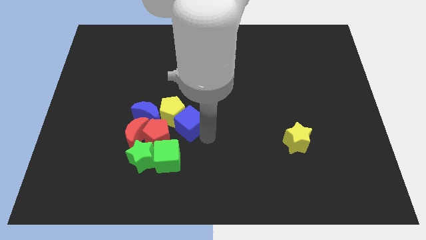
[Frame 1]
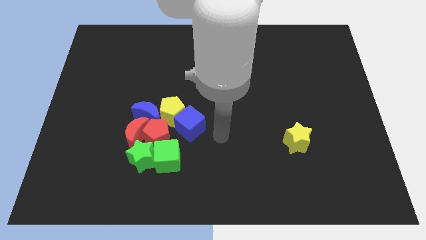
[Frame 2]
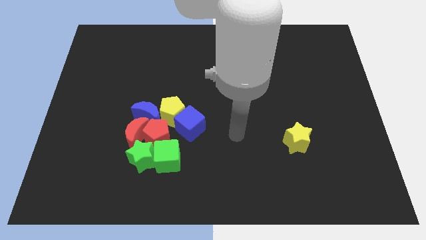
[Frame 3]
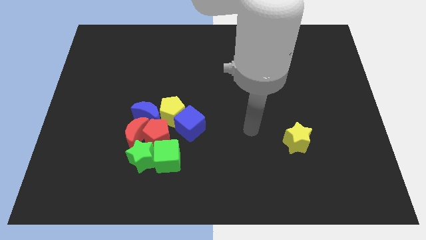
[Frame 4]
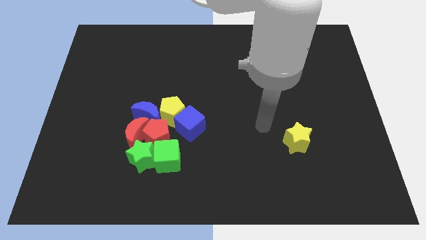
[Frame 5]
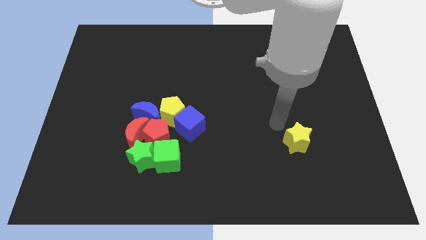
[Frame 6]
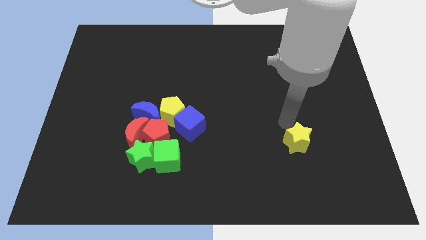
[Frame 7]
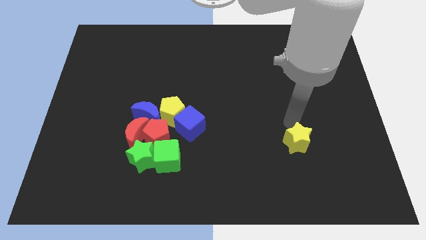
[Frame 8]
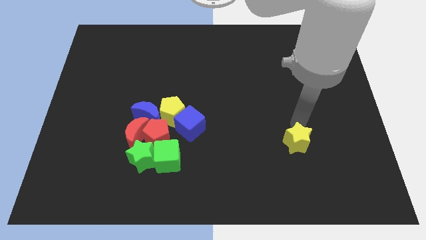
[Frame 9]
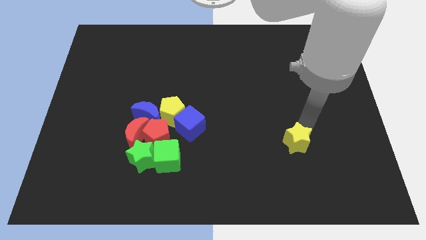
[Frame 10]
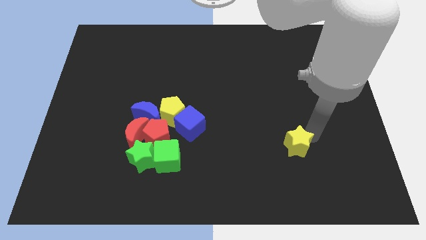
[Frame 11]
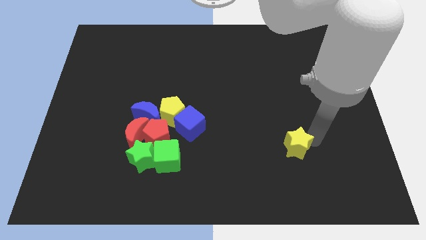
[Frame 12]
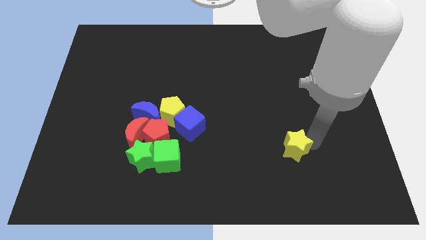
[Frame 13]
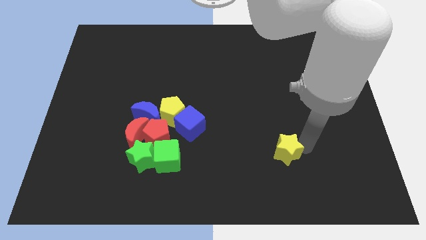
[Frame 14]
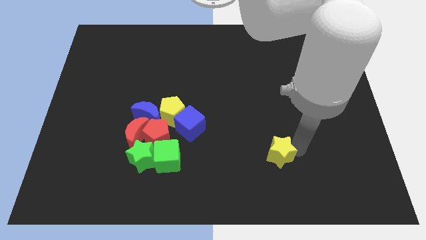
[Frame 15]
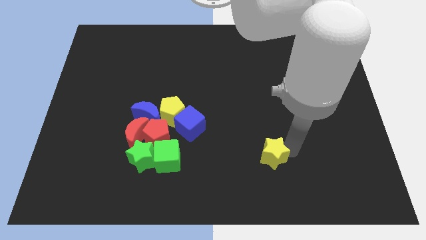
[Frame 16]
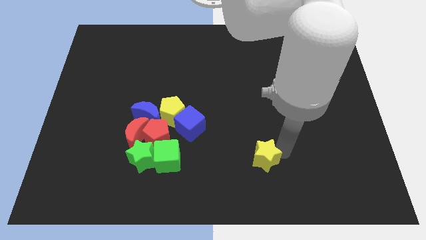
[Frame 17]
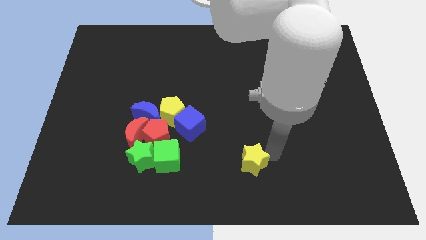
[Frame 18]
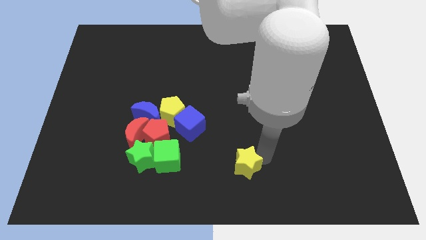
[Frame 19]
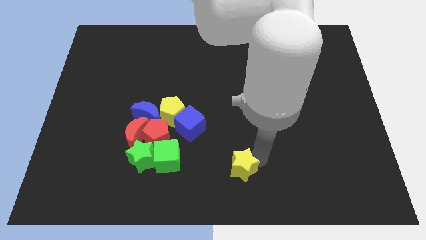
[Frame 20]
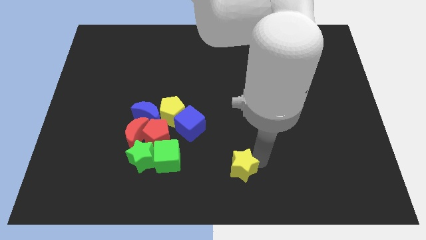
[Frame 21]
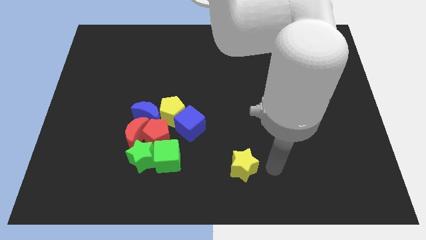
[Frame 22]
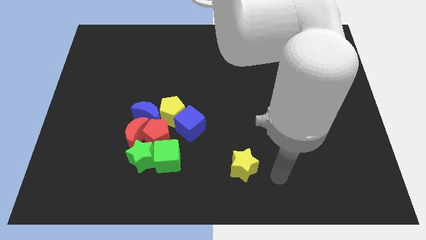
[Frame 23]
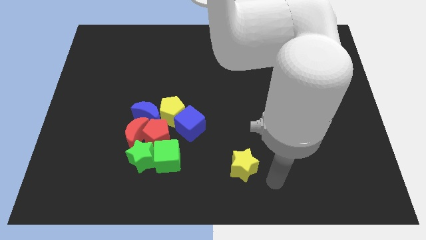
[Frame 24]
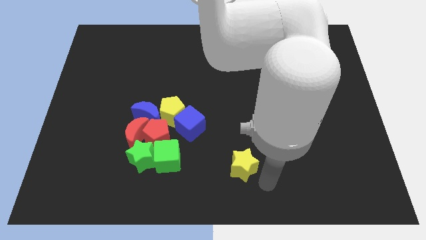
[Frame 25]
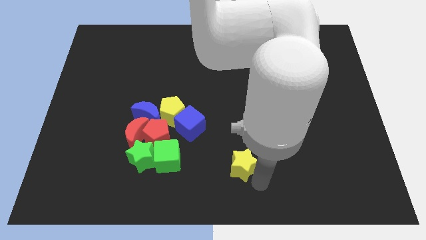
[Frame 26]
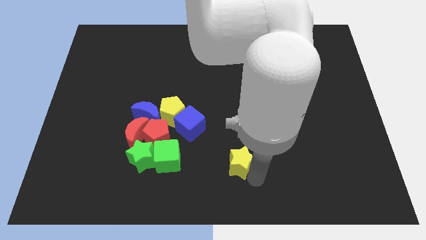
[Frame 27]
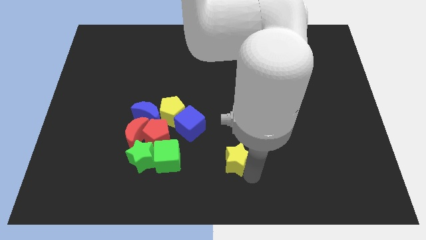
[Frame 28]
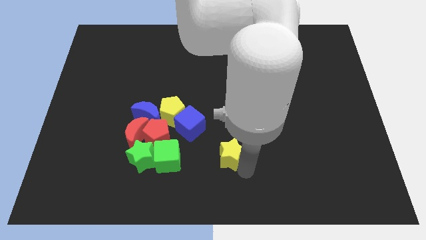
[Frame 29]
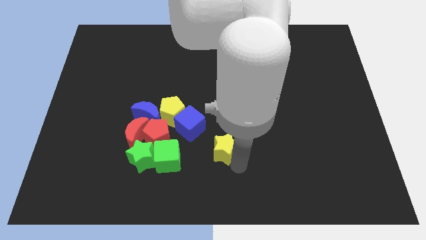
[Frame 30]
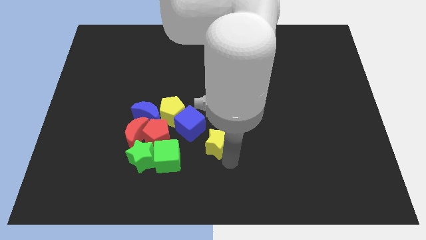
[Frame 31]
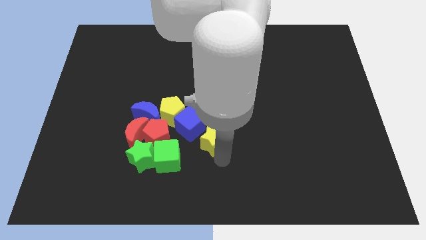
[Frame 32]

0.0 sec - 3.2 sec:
push the yellow star closer to the blue cube

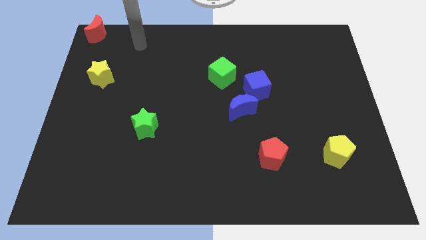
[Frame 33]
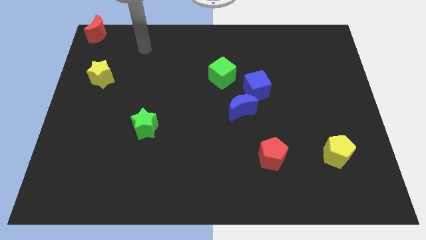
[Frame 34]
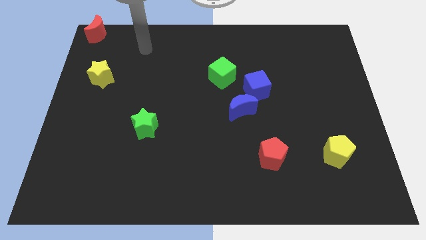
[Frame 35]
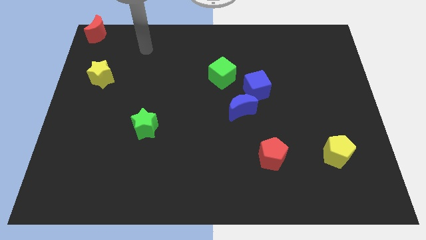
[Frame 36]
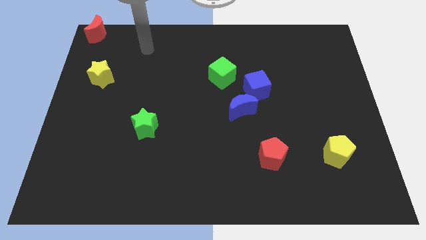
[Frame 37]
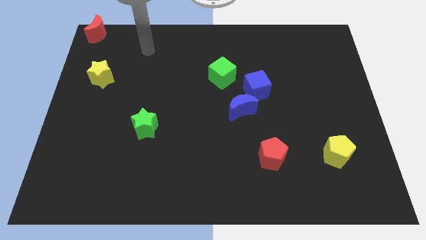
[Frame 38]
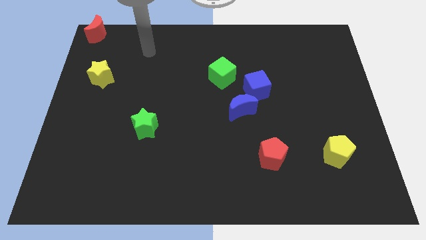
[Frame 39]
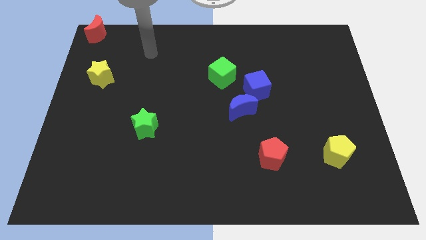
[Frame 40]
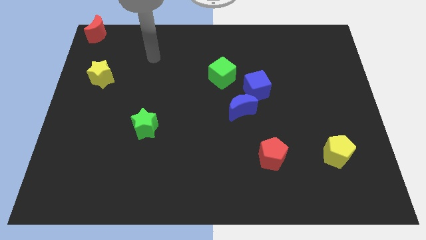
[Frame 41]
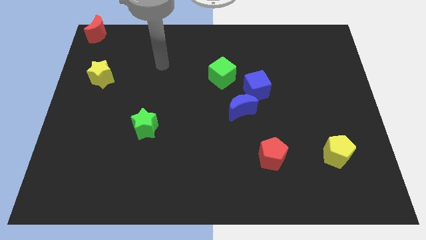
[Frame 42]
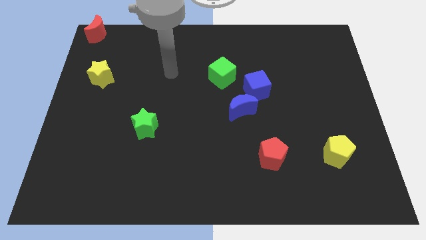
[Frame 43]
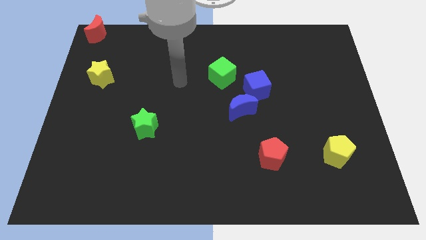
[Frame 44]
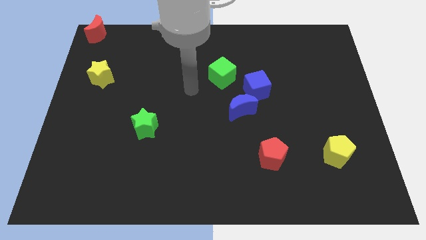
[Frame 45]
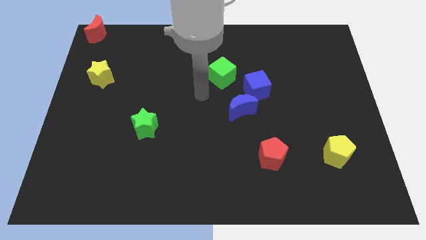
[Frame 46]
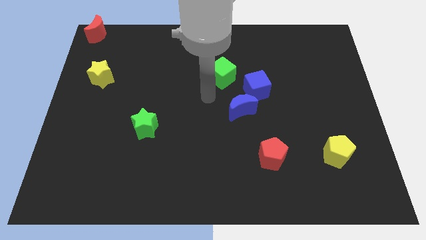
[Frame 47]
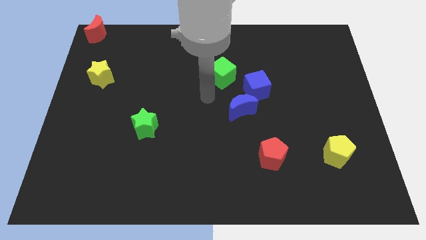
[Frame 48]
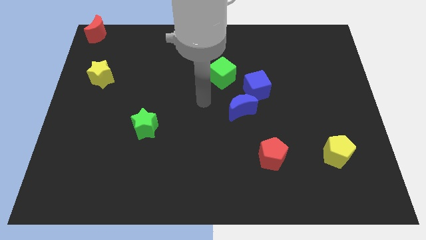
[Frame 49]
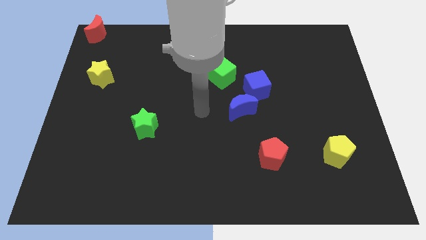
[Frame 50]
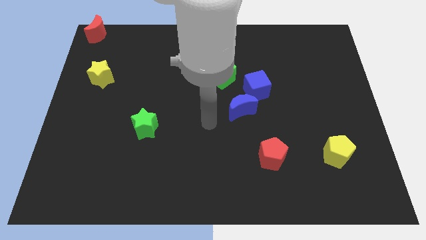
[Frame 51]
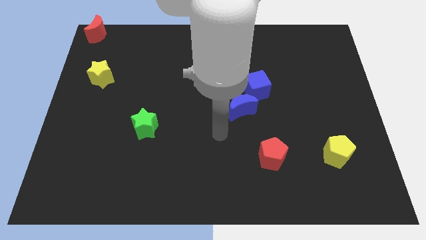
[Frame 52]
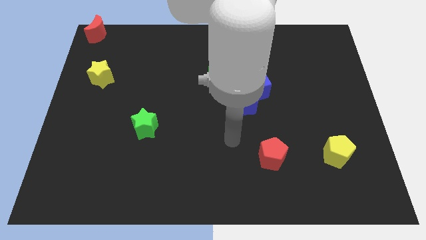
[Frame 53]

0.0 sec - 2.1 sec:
move your arm away from the red moon

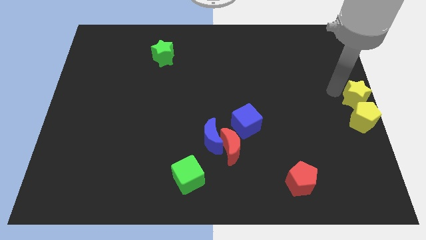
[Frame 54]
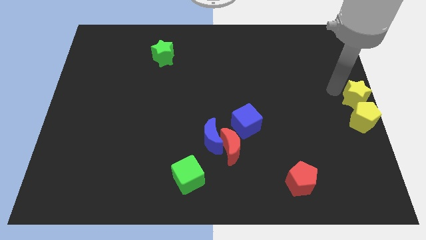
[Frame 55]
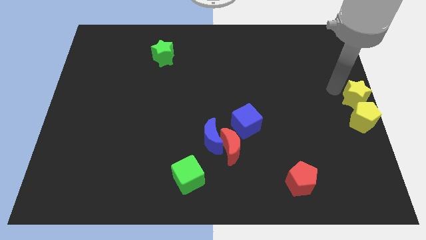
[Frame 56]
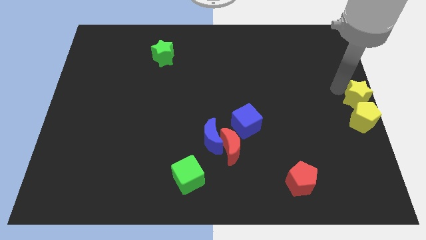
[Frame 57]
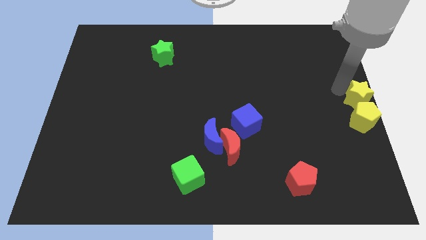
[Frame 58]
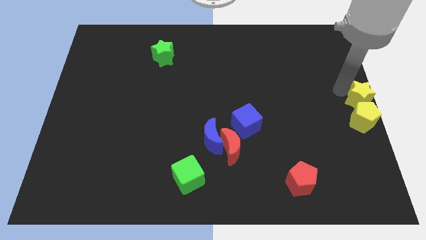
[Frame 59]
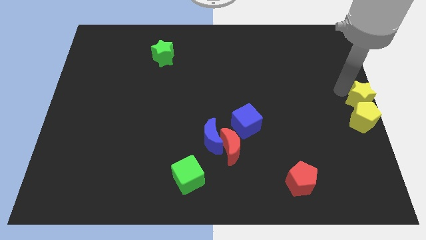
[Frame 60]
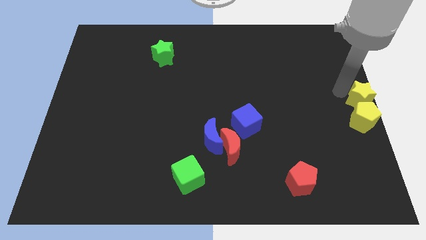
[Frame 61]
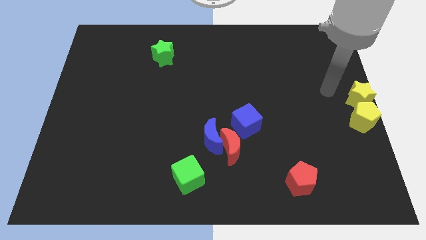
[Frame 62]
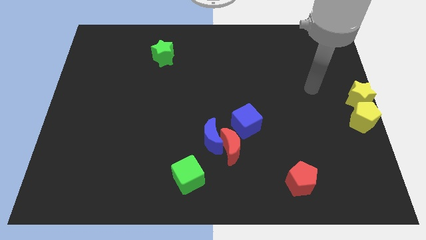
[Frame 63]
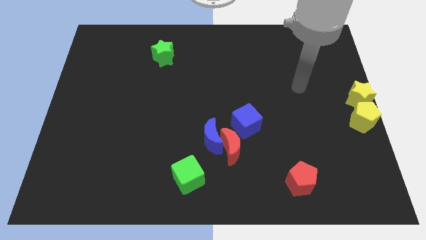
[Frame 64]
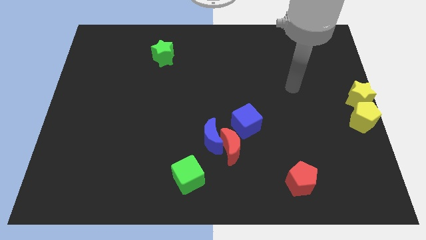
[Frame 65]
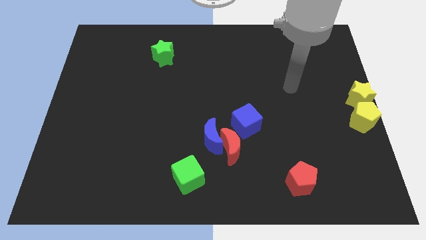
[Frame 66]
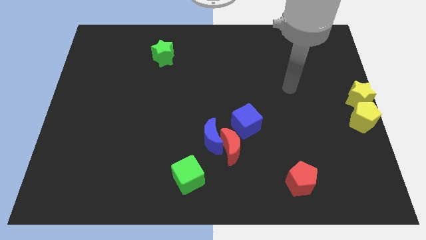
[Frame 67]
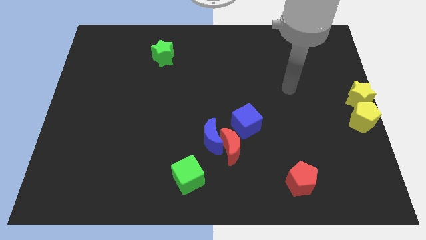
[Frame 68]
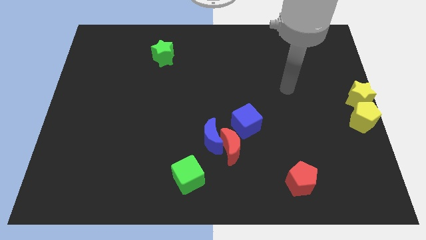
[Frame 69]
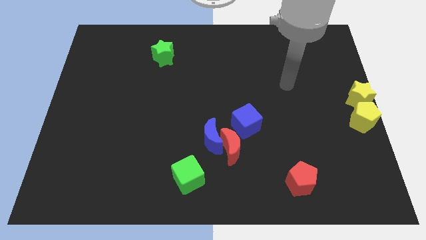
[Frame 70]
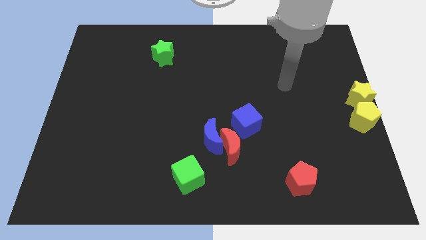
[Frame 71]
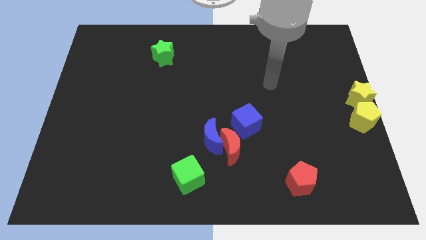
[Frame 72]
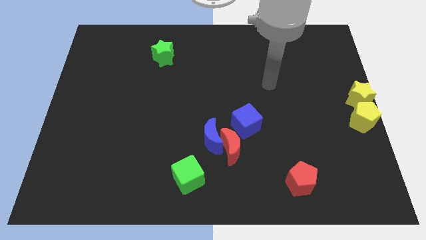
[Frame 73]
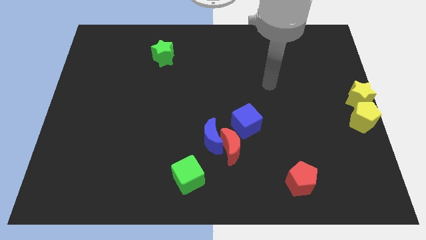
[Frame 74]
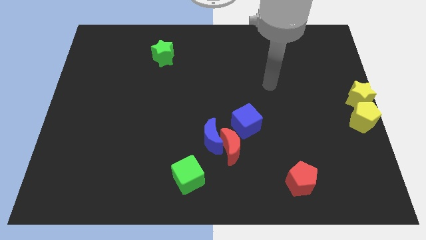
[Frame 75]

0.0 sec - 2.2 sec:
move your arm away from yellow star

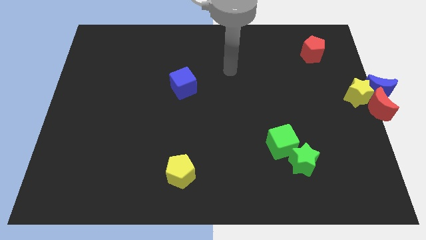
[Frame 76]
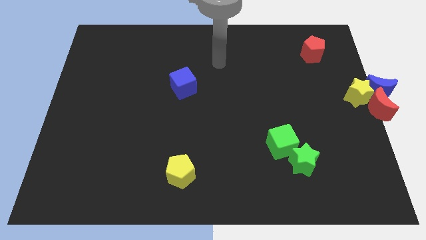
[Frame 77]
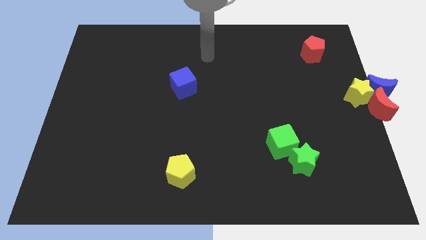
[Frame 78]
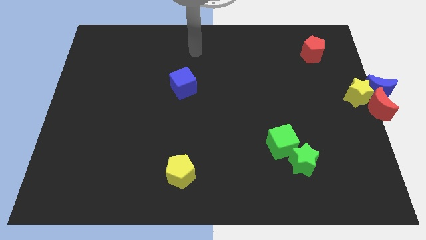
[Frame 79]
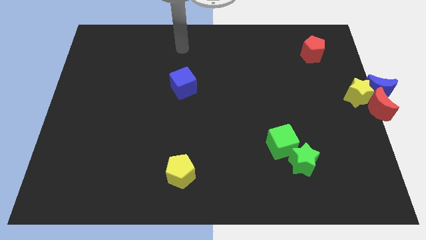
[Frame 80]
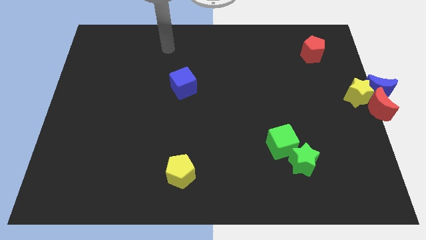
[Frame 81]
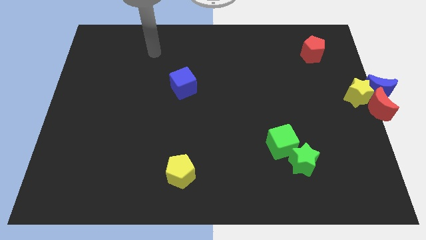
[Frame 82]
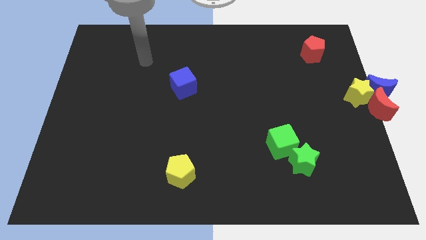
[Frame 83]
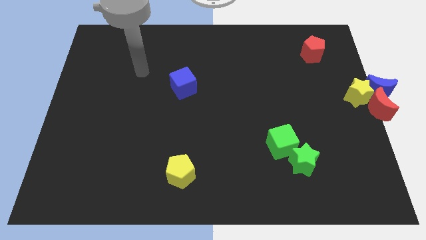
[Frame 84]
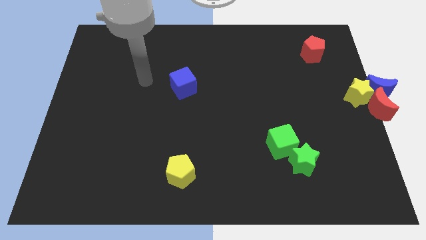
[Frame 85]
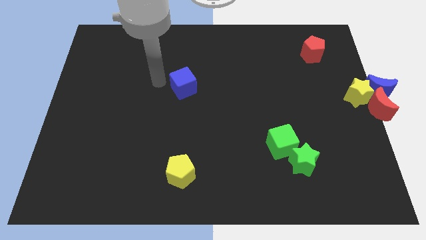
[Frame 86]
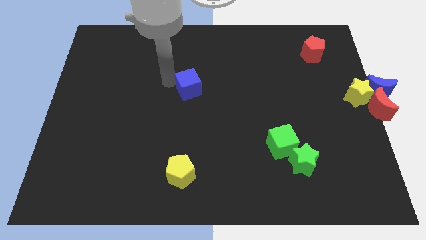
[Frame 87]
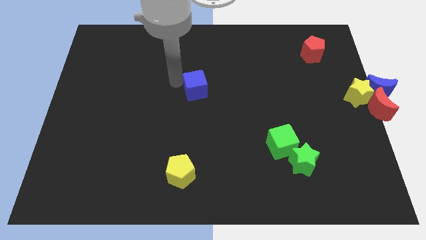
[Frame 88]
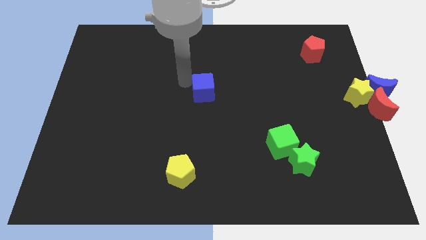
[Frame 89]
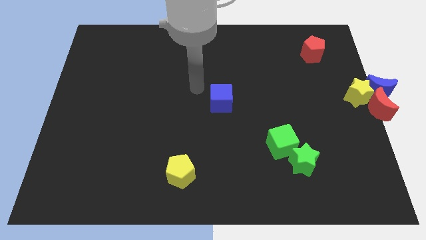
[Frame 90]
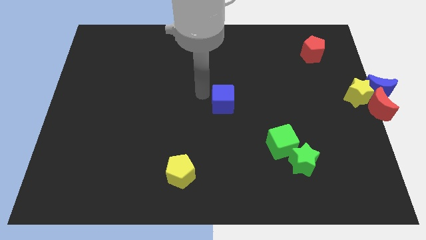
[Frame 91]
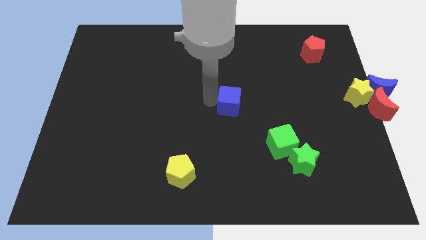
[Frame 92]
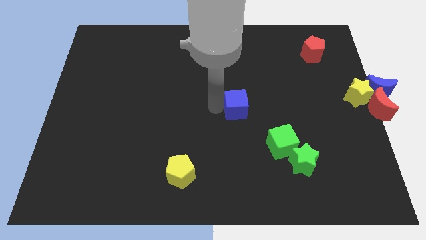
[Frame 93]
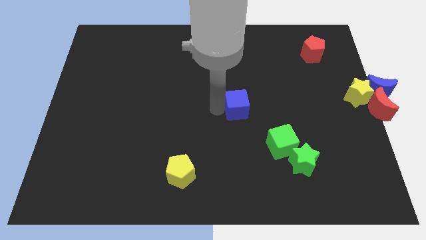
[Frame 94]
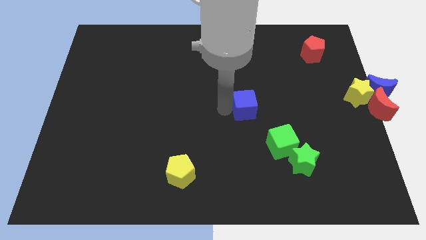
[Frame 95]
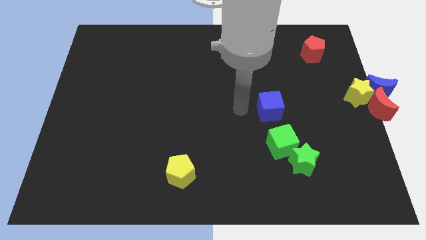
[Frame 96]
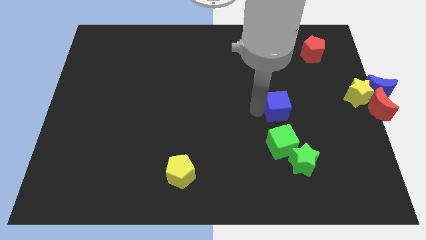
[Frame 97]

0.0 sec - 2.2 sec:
place the blue moon above the green cube
